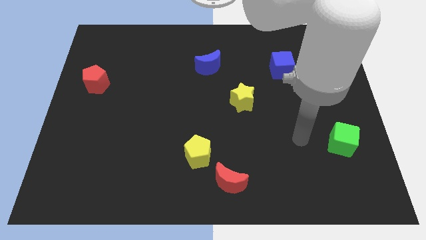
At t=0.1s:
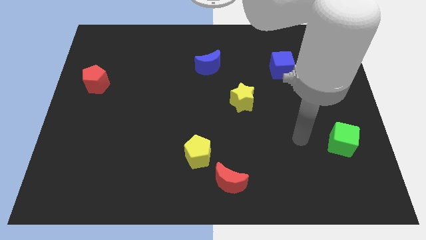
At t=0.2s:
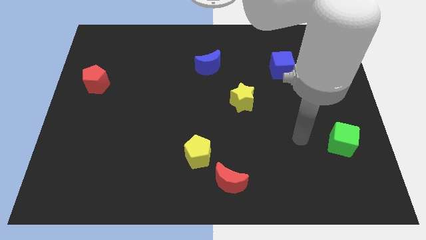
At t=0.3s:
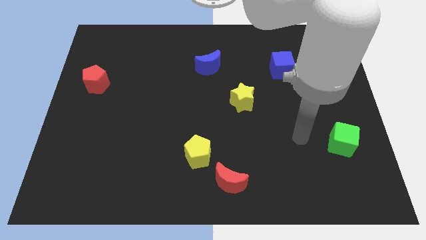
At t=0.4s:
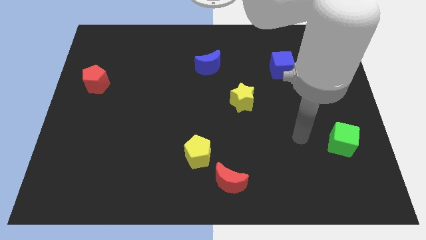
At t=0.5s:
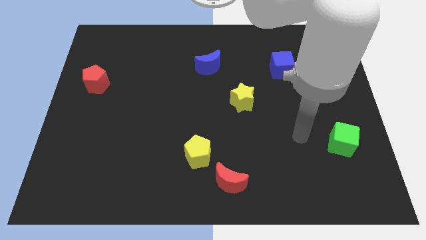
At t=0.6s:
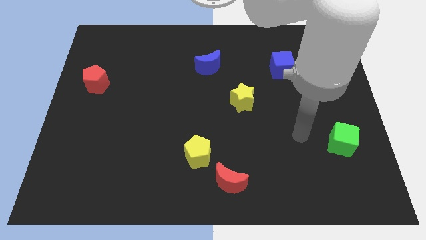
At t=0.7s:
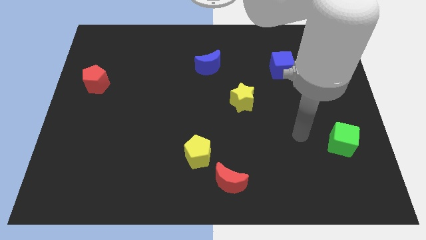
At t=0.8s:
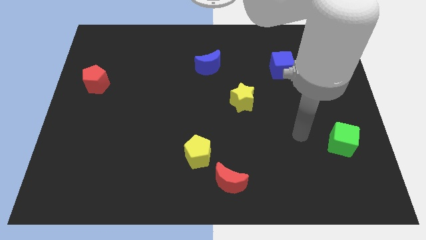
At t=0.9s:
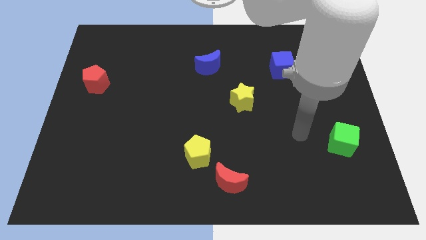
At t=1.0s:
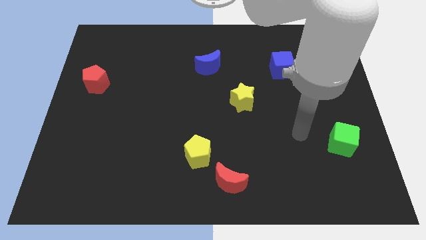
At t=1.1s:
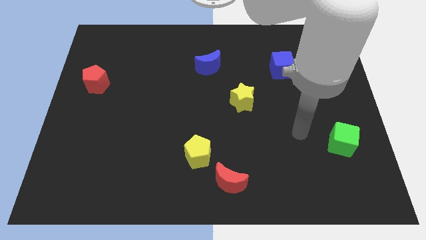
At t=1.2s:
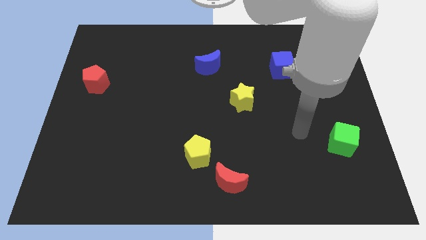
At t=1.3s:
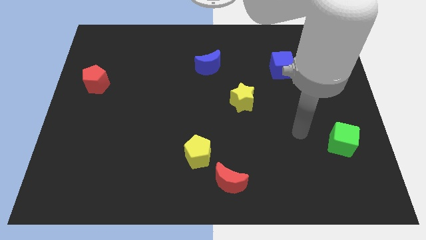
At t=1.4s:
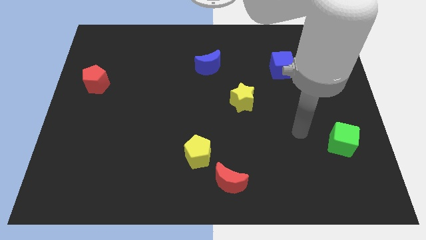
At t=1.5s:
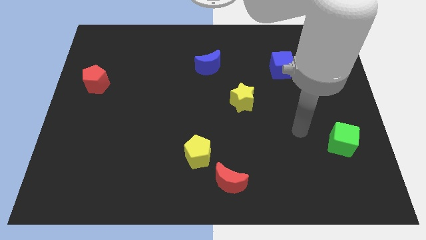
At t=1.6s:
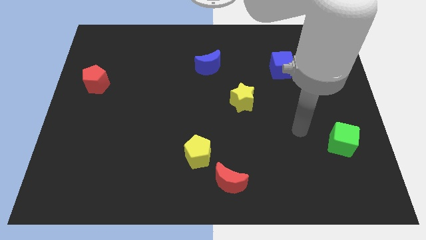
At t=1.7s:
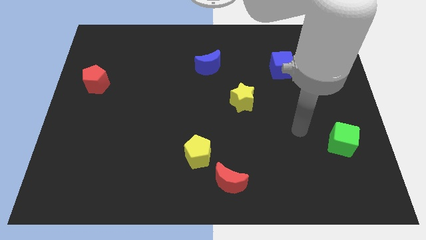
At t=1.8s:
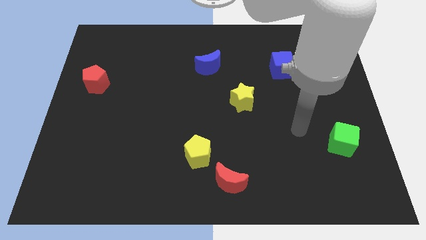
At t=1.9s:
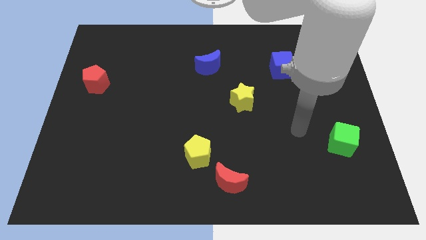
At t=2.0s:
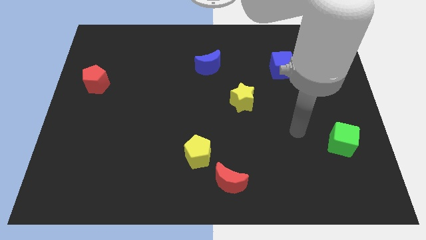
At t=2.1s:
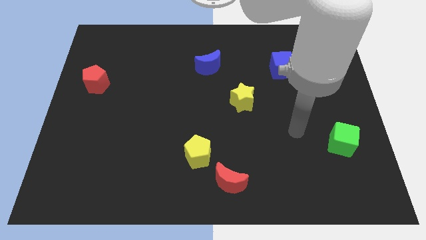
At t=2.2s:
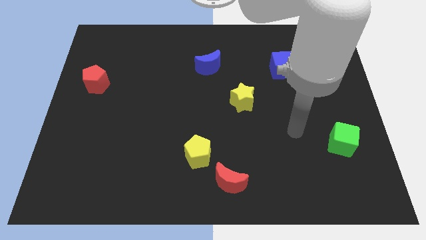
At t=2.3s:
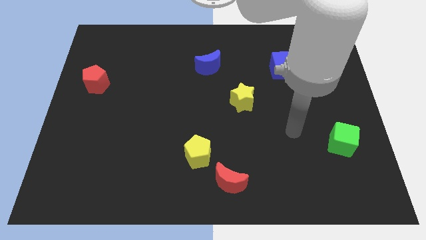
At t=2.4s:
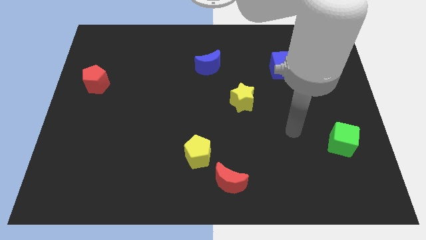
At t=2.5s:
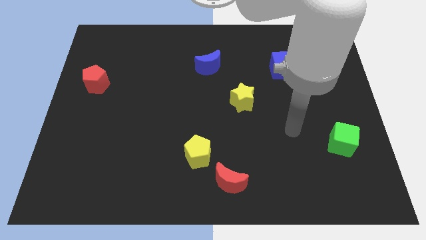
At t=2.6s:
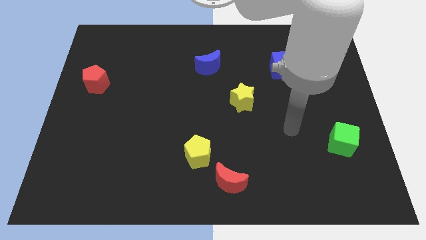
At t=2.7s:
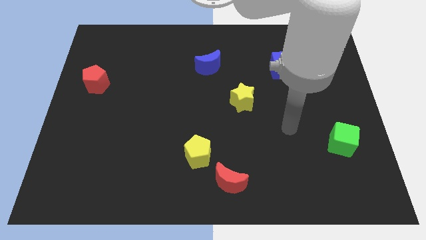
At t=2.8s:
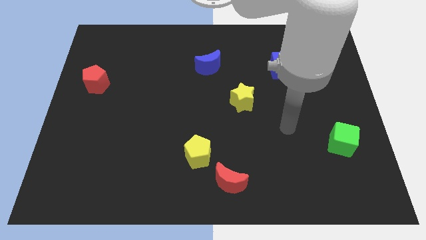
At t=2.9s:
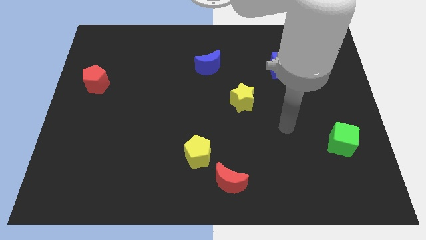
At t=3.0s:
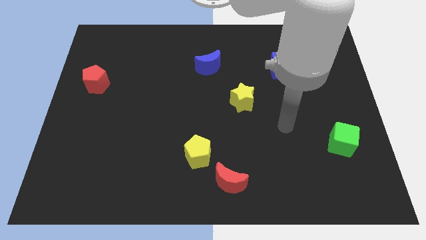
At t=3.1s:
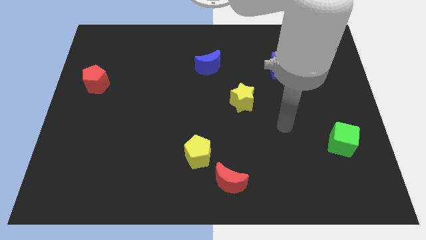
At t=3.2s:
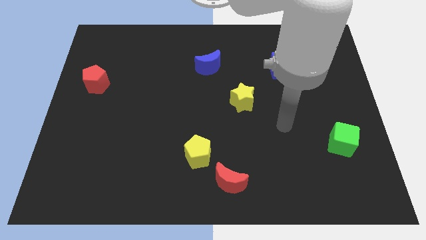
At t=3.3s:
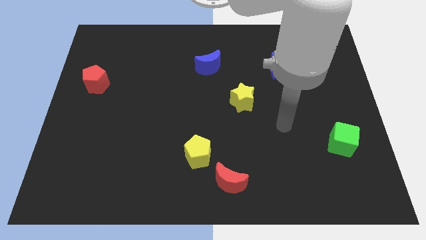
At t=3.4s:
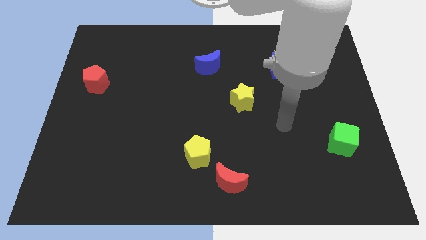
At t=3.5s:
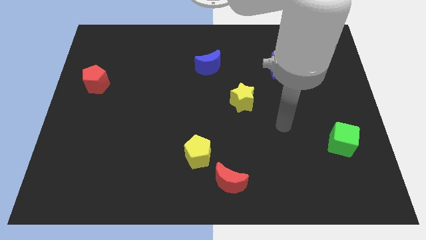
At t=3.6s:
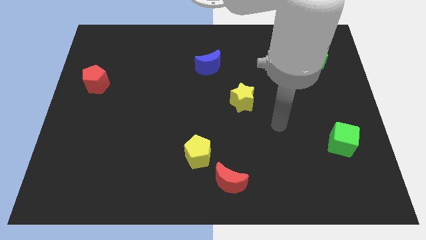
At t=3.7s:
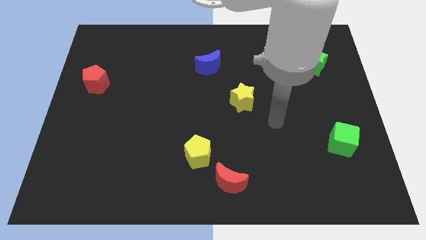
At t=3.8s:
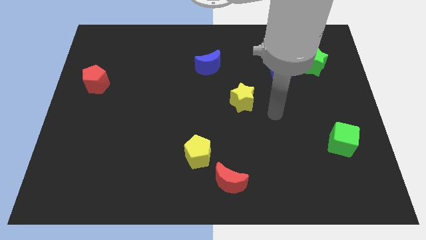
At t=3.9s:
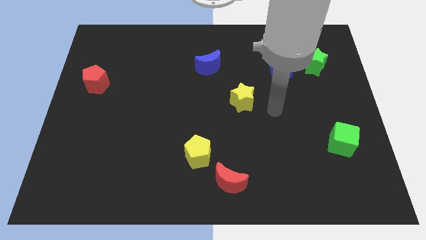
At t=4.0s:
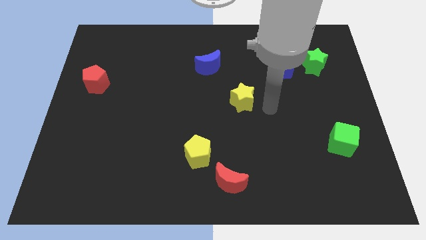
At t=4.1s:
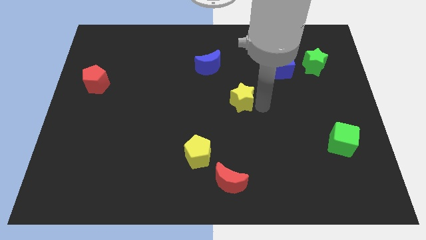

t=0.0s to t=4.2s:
place your arm towards the right side of the yellow star

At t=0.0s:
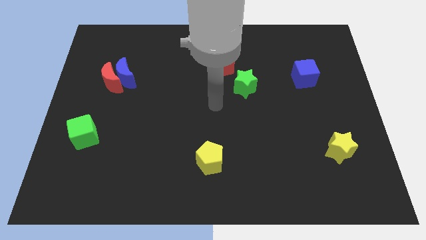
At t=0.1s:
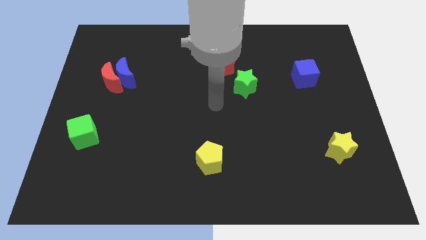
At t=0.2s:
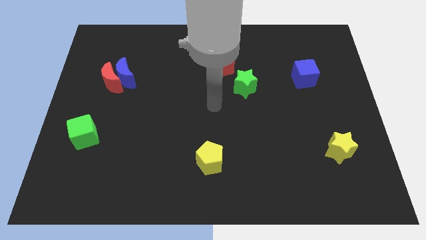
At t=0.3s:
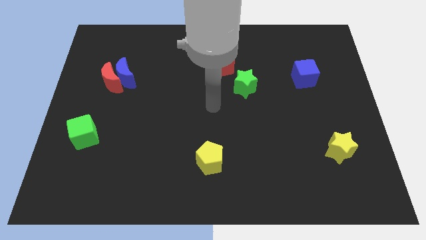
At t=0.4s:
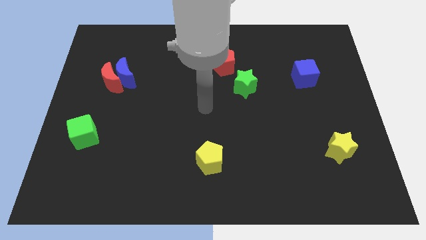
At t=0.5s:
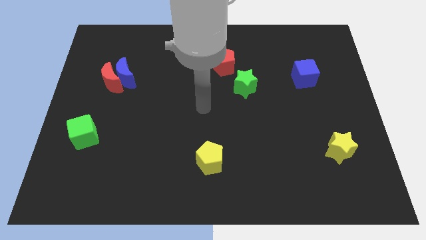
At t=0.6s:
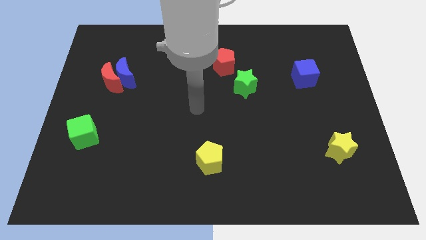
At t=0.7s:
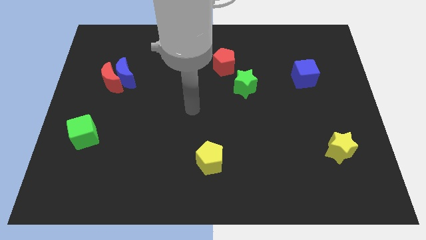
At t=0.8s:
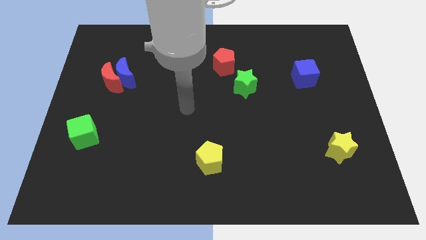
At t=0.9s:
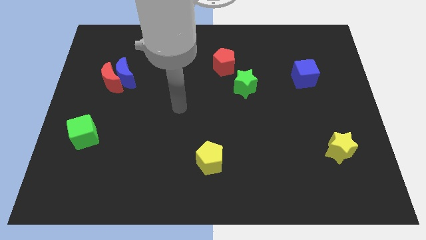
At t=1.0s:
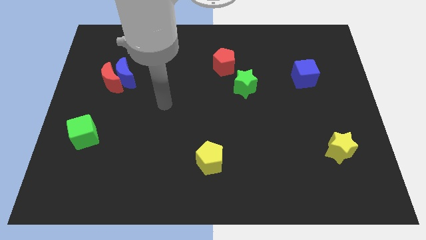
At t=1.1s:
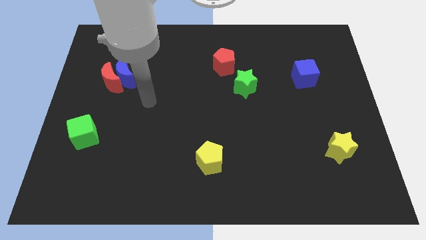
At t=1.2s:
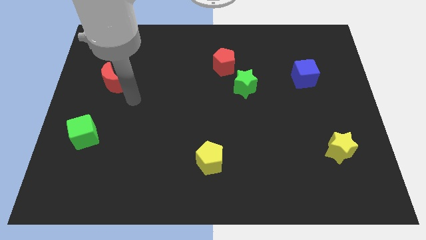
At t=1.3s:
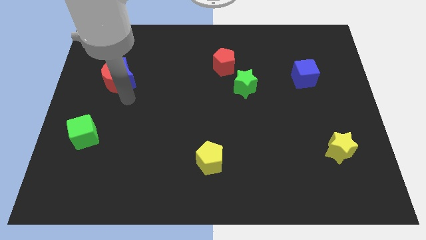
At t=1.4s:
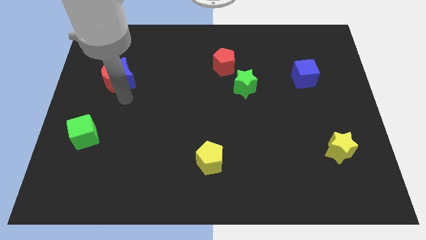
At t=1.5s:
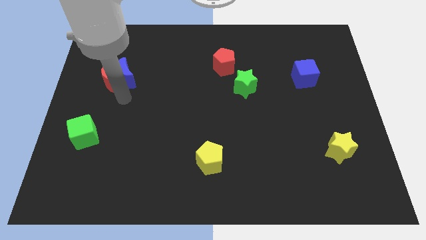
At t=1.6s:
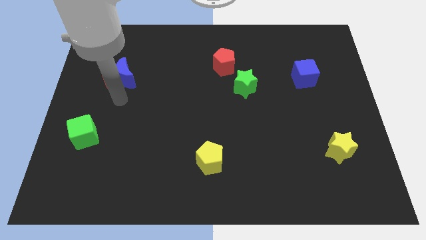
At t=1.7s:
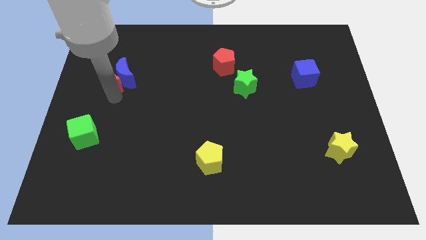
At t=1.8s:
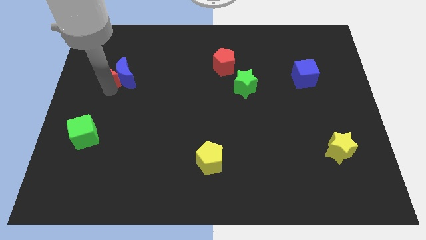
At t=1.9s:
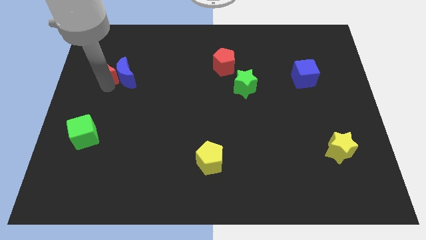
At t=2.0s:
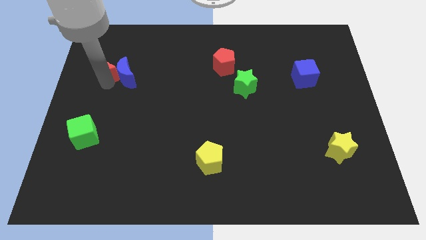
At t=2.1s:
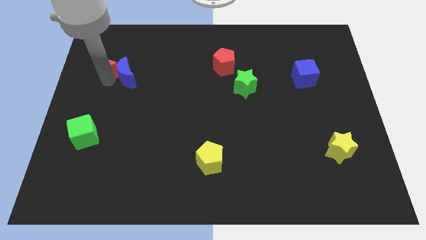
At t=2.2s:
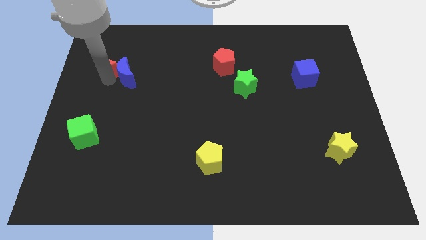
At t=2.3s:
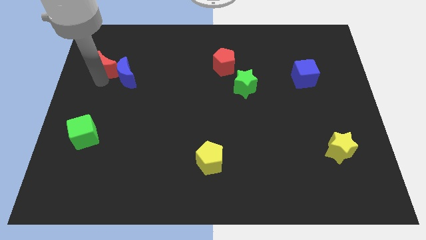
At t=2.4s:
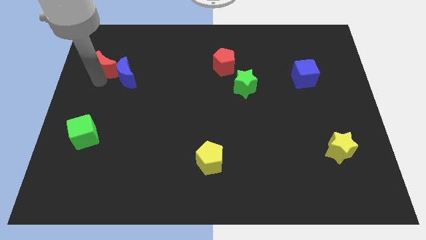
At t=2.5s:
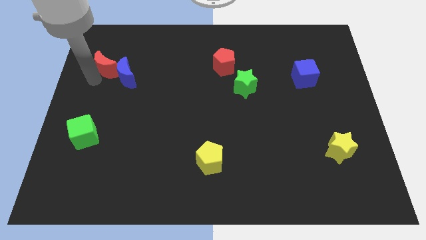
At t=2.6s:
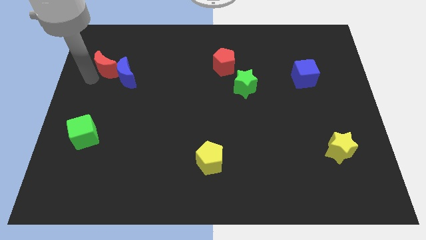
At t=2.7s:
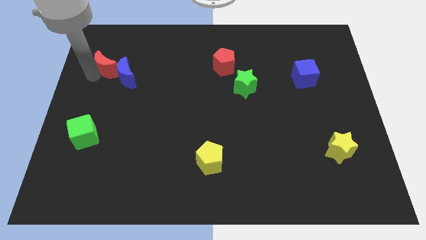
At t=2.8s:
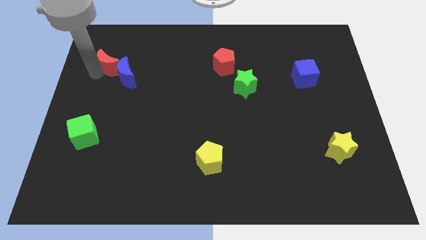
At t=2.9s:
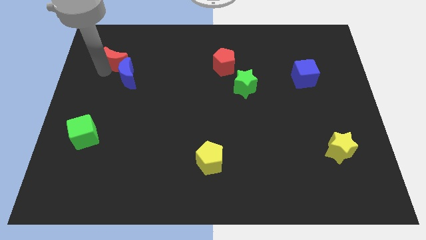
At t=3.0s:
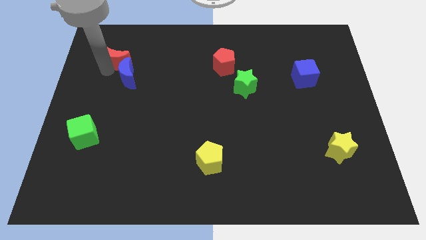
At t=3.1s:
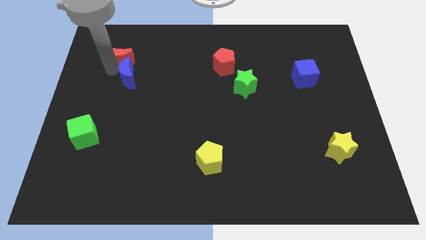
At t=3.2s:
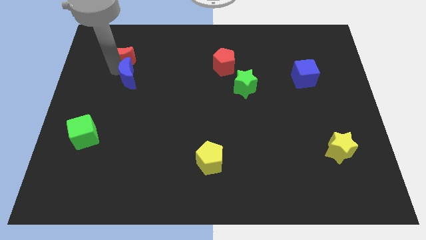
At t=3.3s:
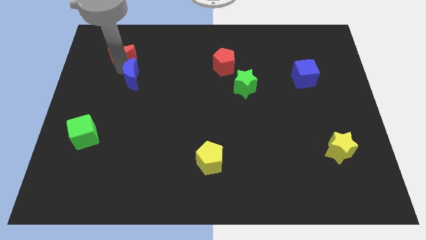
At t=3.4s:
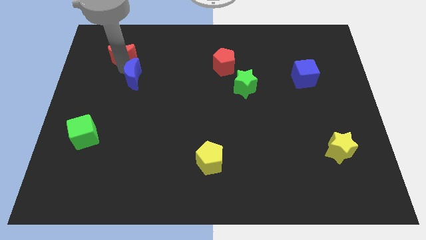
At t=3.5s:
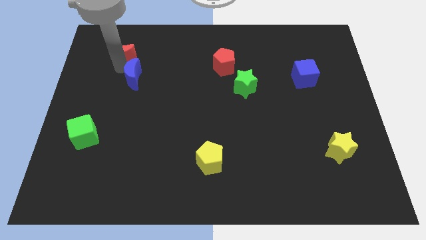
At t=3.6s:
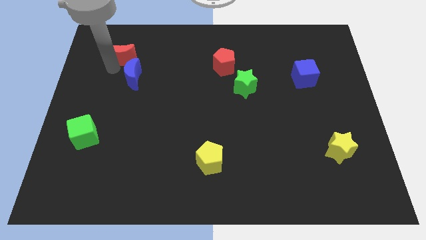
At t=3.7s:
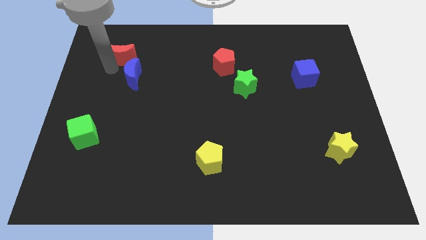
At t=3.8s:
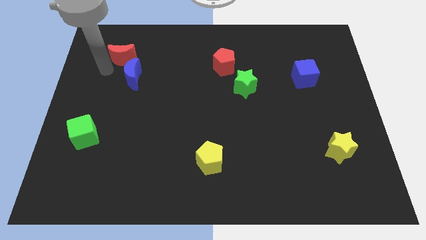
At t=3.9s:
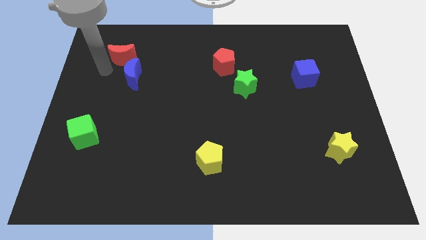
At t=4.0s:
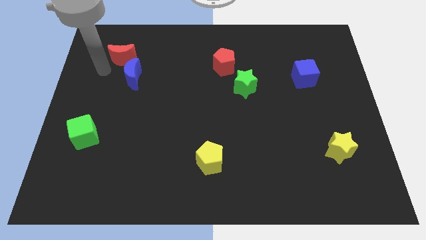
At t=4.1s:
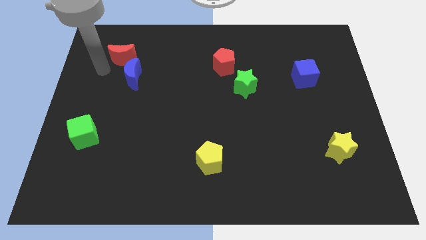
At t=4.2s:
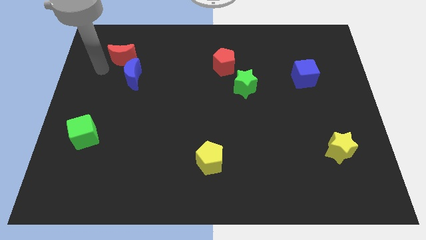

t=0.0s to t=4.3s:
place the red moon above the blue crescent

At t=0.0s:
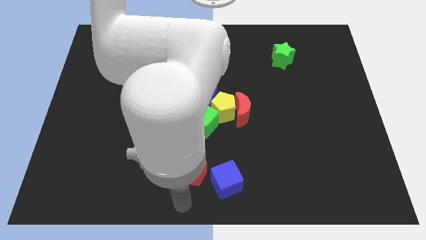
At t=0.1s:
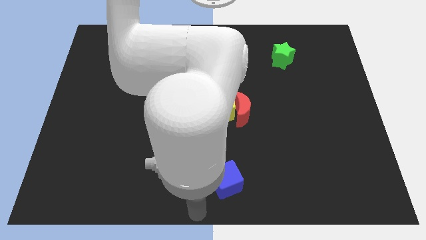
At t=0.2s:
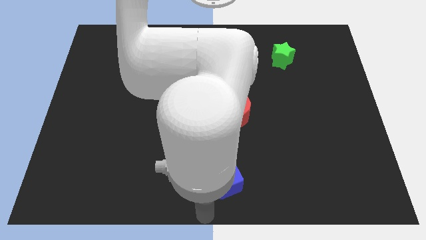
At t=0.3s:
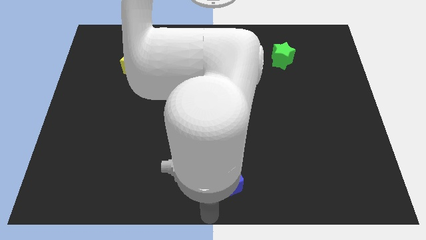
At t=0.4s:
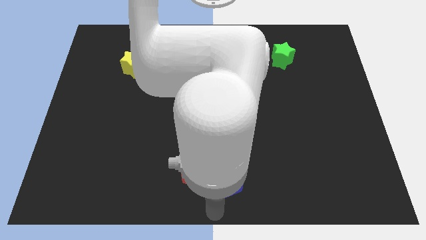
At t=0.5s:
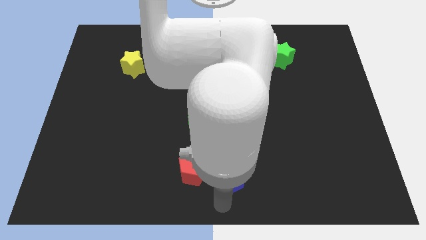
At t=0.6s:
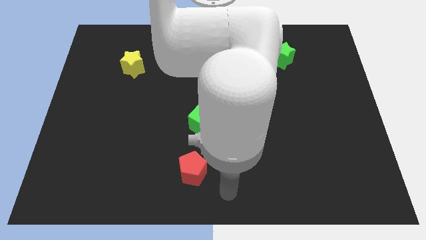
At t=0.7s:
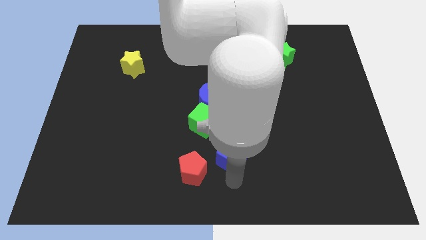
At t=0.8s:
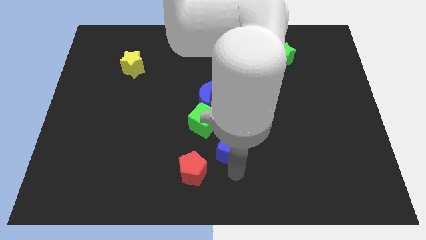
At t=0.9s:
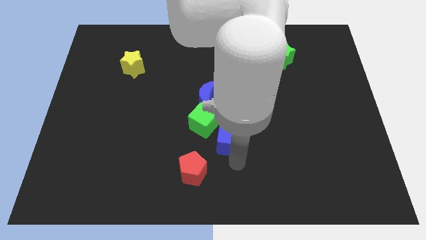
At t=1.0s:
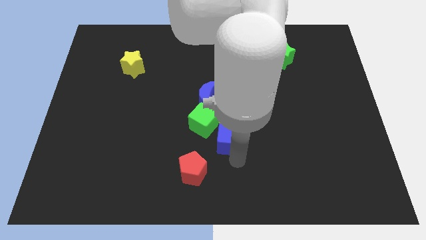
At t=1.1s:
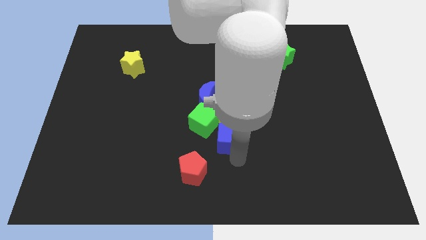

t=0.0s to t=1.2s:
move the blue cube to the bottom side of the yellow pentagon
